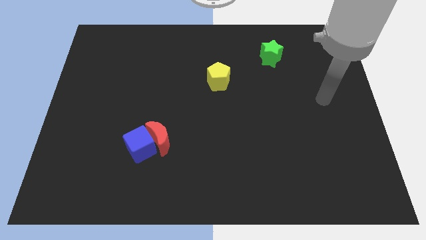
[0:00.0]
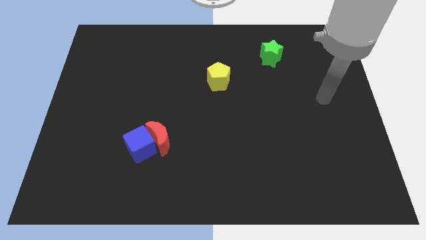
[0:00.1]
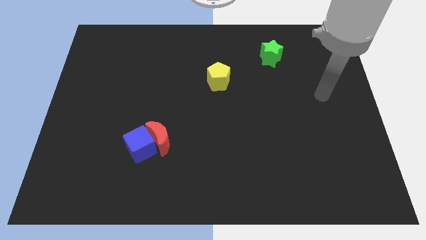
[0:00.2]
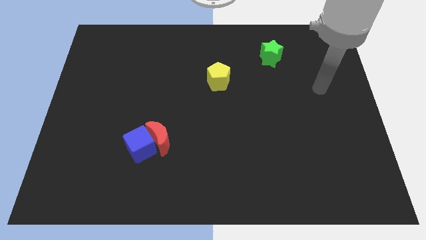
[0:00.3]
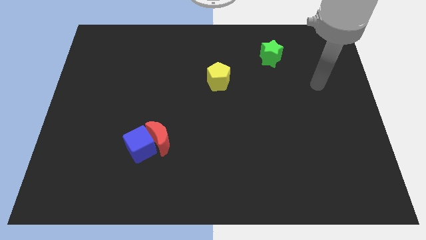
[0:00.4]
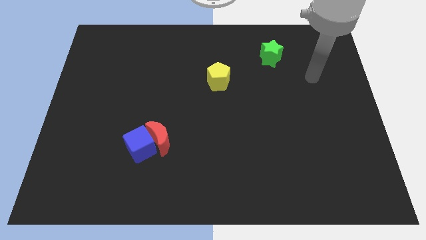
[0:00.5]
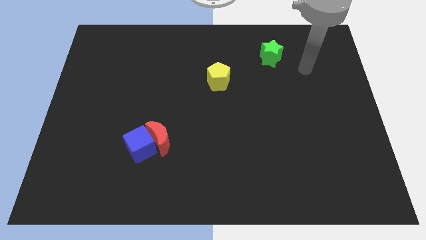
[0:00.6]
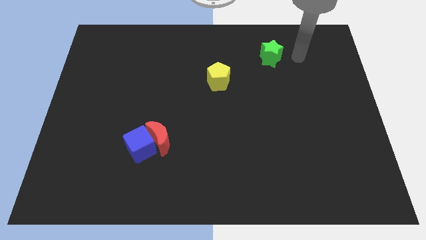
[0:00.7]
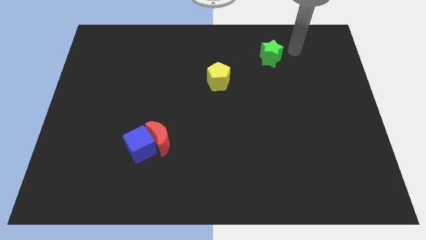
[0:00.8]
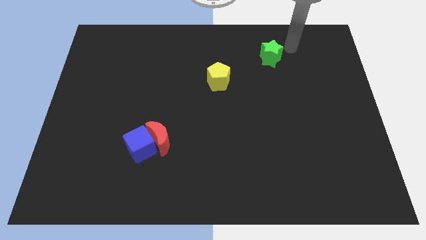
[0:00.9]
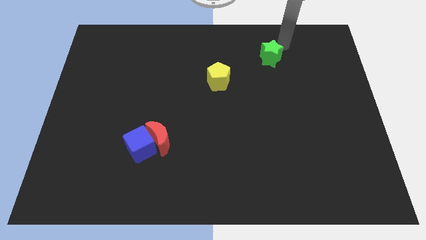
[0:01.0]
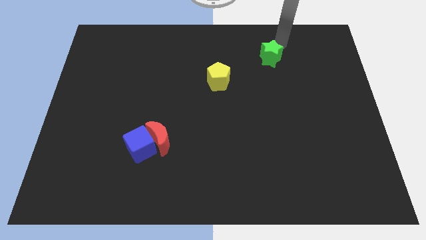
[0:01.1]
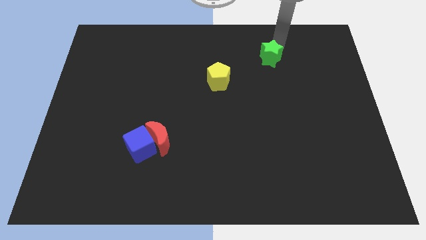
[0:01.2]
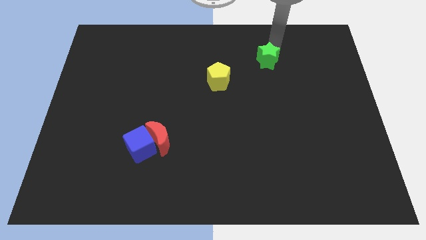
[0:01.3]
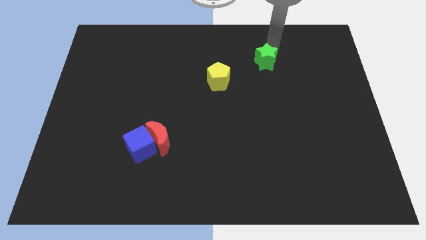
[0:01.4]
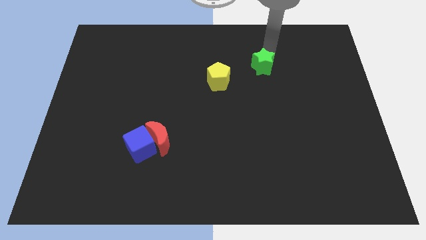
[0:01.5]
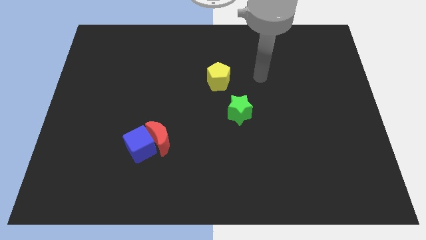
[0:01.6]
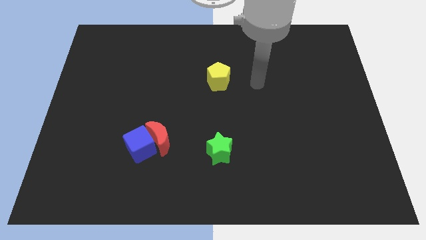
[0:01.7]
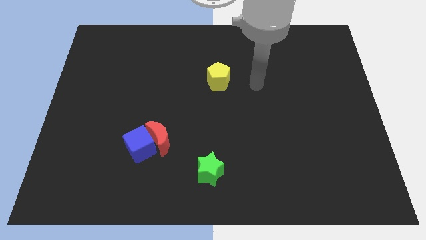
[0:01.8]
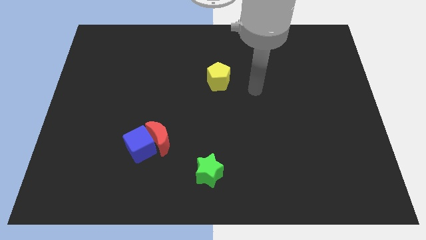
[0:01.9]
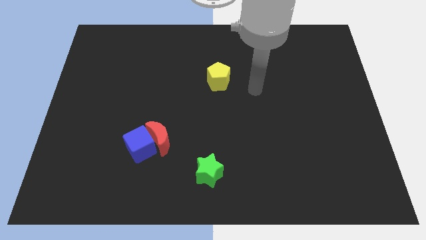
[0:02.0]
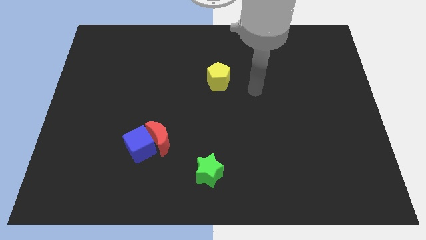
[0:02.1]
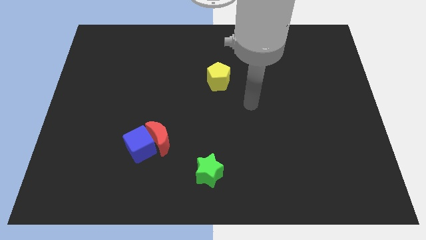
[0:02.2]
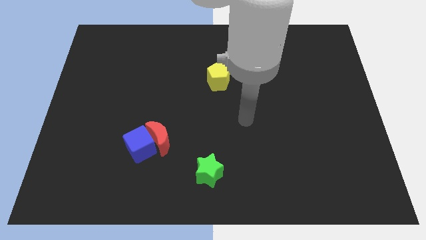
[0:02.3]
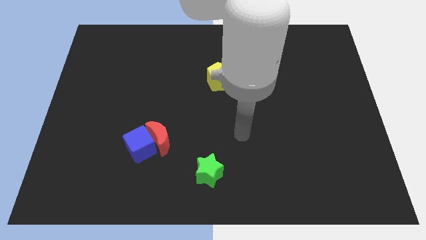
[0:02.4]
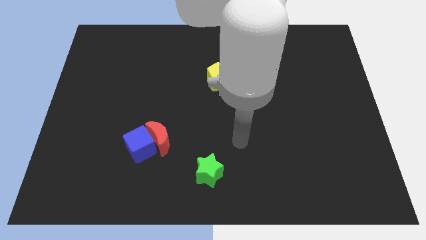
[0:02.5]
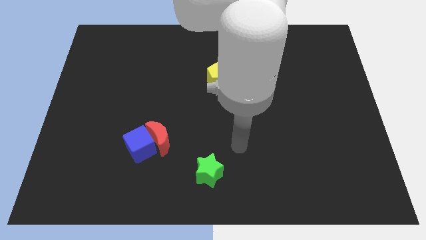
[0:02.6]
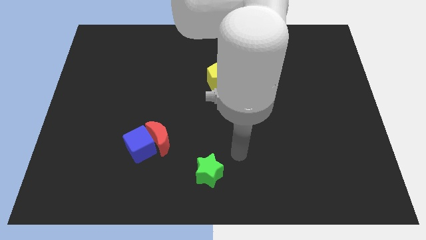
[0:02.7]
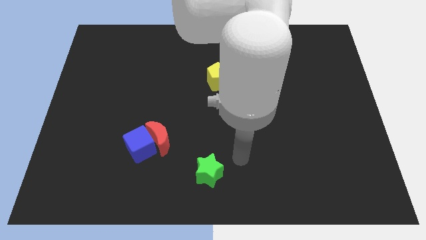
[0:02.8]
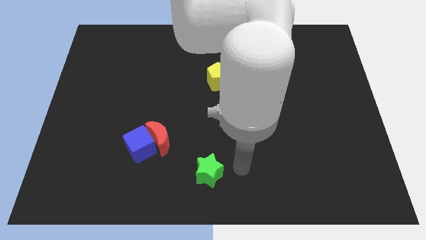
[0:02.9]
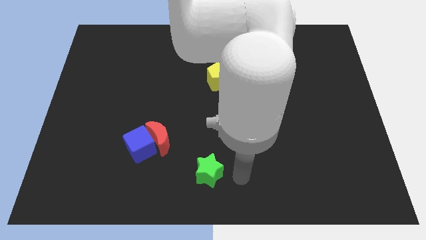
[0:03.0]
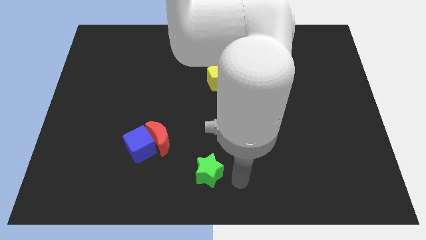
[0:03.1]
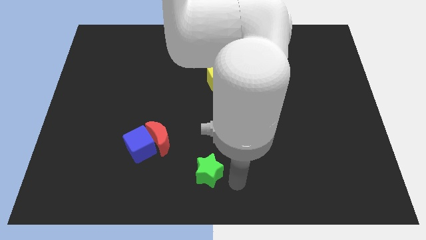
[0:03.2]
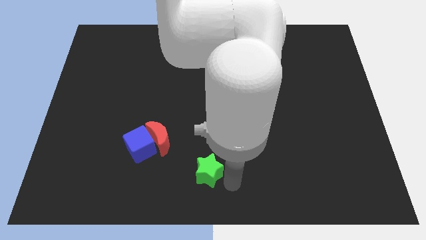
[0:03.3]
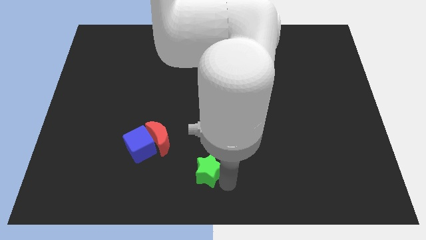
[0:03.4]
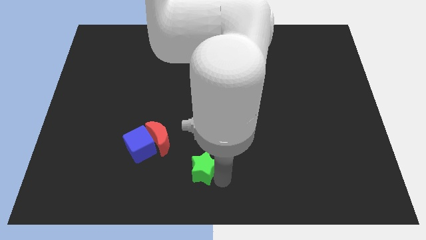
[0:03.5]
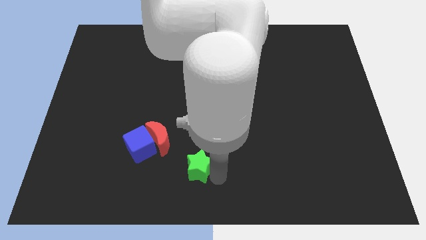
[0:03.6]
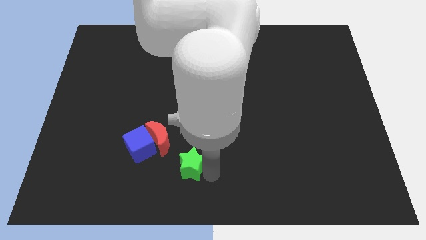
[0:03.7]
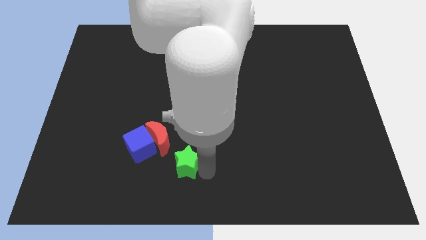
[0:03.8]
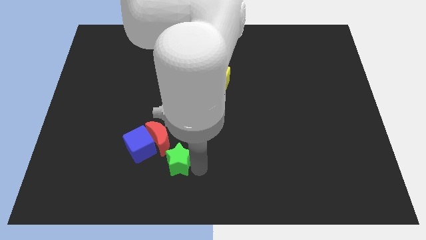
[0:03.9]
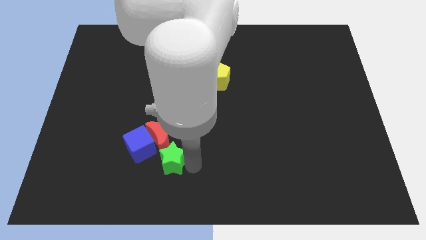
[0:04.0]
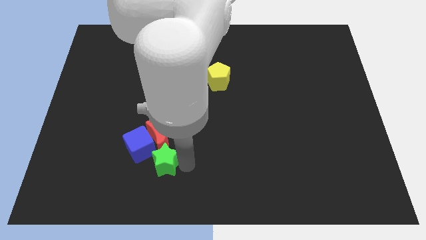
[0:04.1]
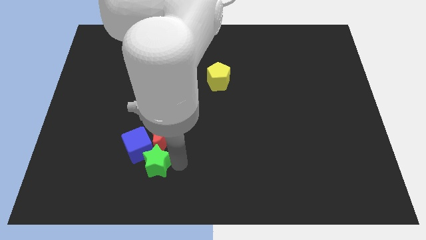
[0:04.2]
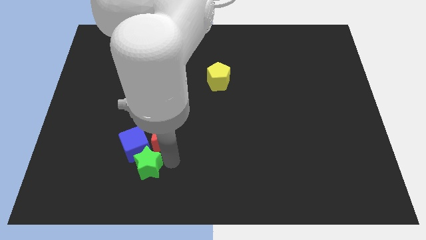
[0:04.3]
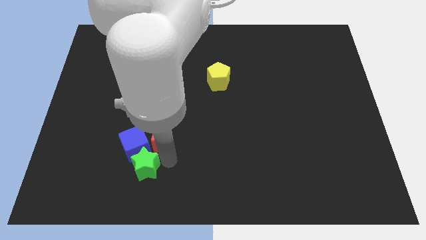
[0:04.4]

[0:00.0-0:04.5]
move the green star towards the blue block

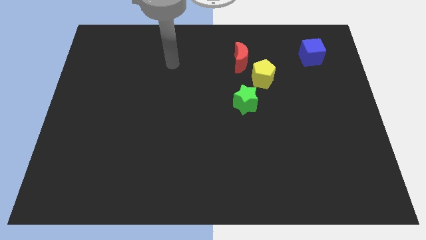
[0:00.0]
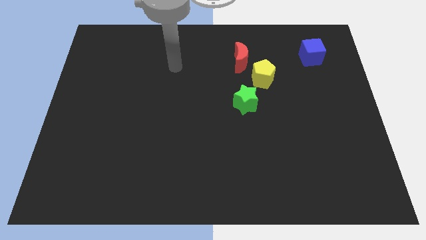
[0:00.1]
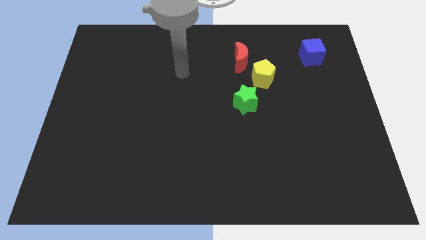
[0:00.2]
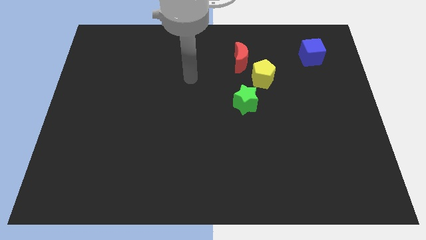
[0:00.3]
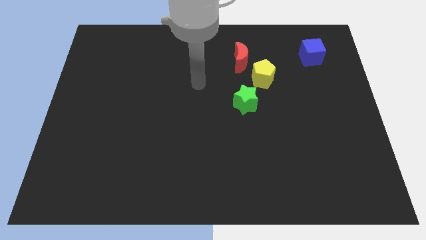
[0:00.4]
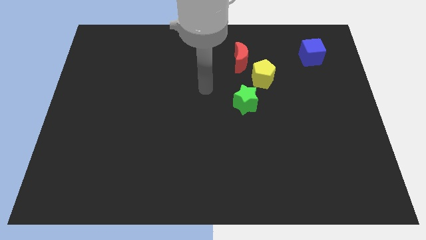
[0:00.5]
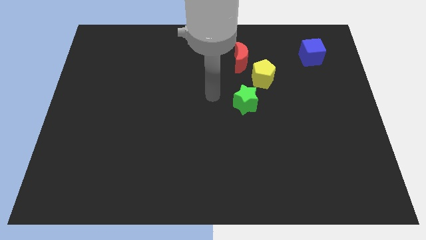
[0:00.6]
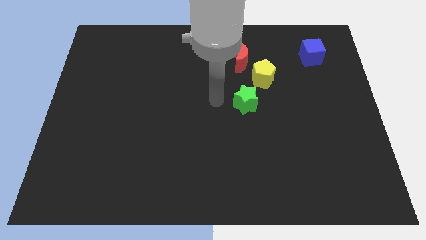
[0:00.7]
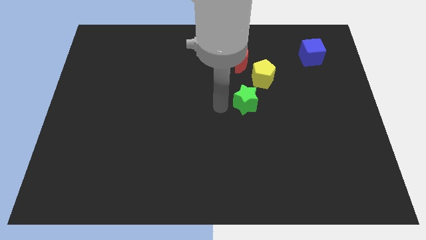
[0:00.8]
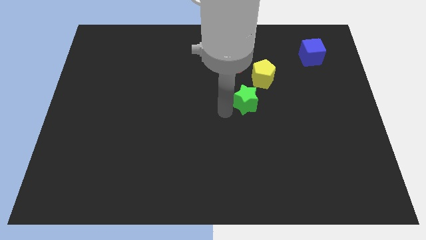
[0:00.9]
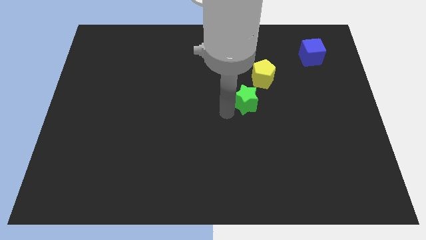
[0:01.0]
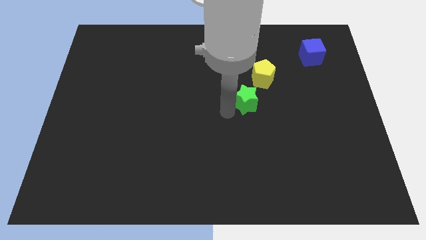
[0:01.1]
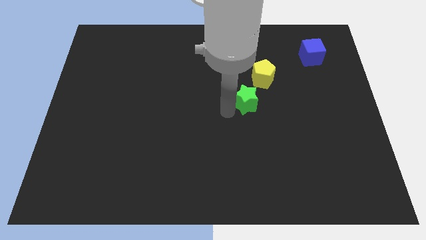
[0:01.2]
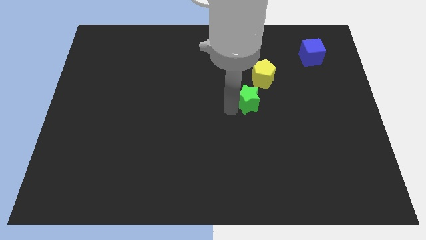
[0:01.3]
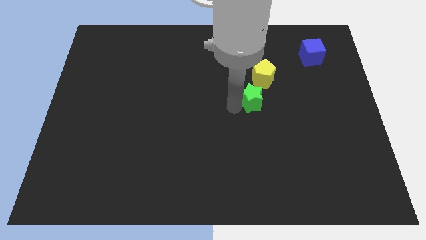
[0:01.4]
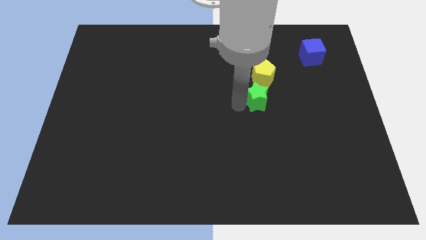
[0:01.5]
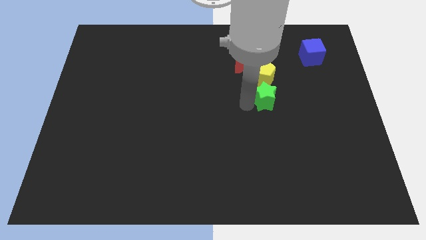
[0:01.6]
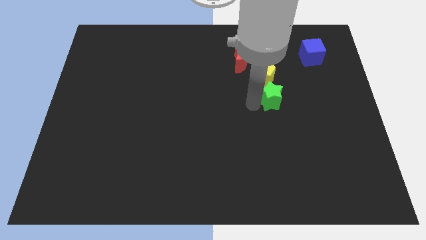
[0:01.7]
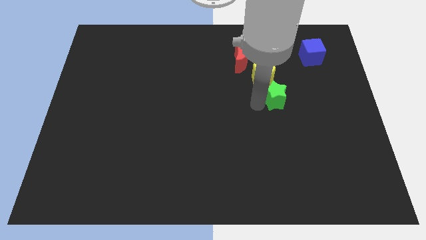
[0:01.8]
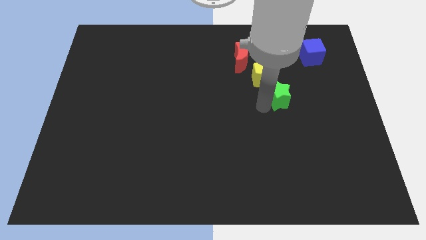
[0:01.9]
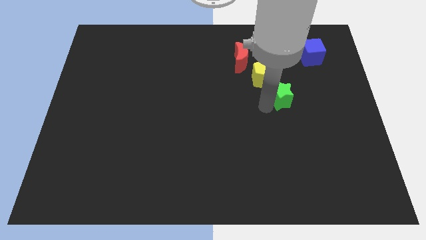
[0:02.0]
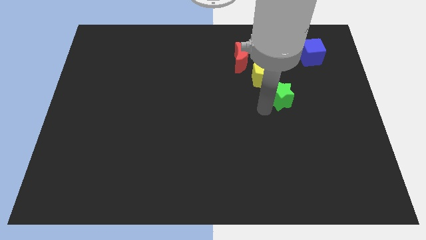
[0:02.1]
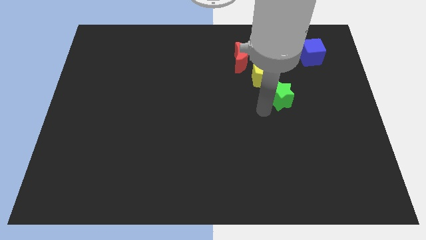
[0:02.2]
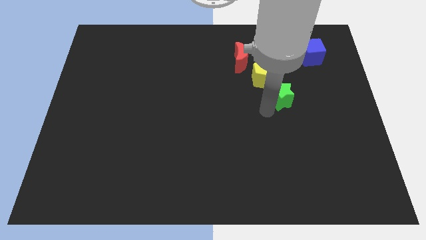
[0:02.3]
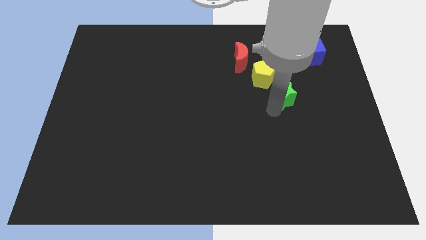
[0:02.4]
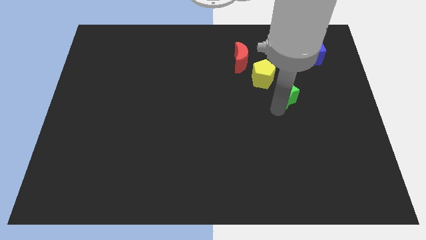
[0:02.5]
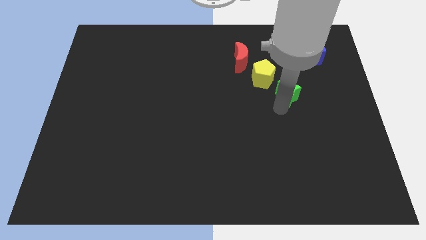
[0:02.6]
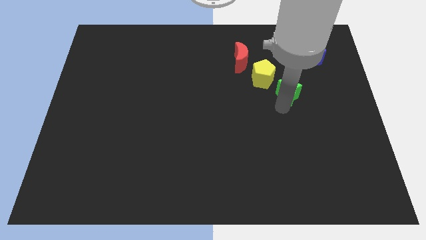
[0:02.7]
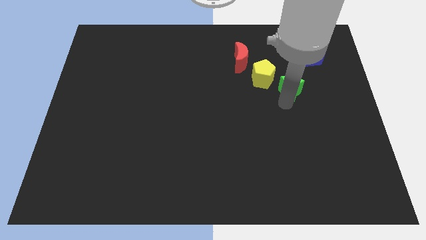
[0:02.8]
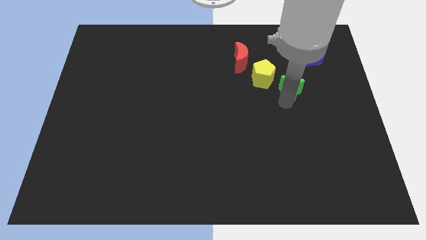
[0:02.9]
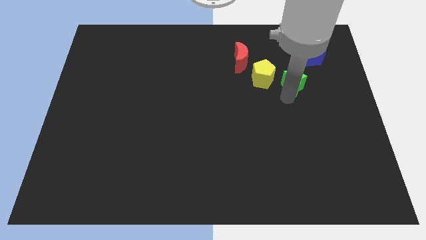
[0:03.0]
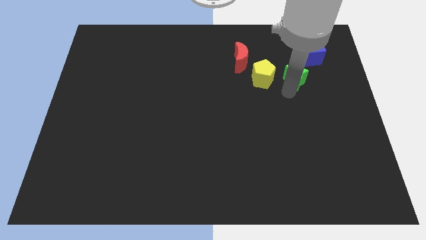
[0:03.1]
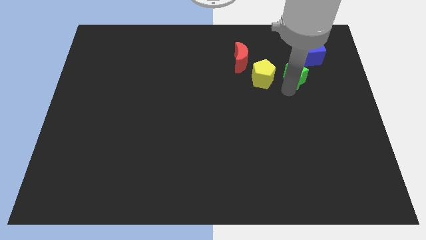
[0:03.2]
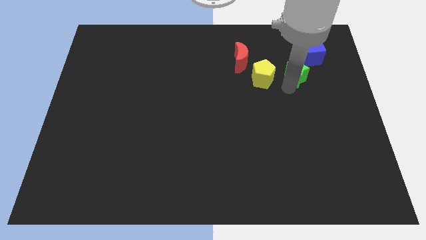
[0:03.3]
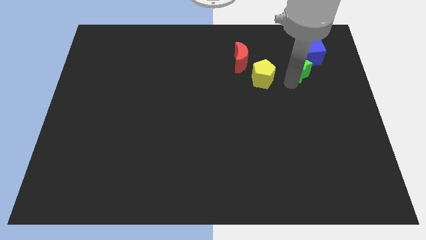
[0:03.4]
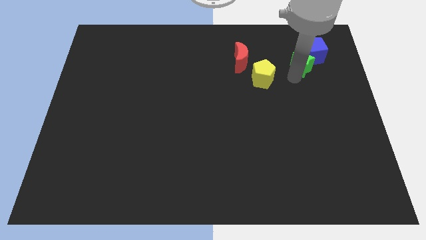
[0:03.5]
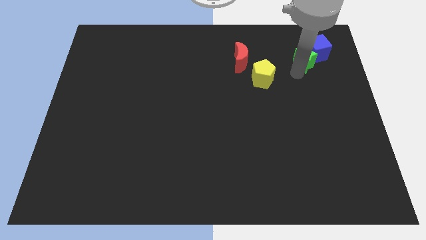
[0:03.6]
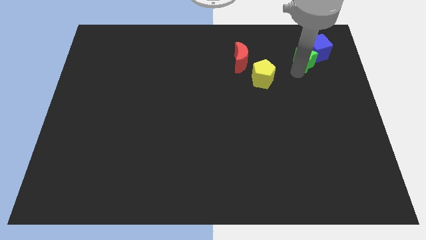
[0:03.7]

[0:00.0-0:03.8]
push the star towards the blue cube

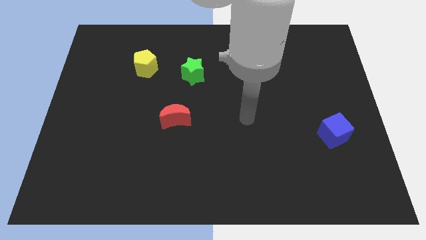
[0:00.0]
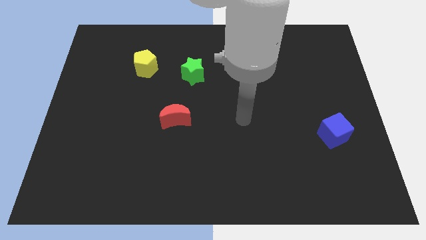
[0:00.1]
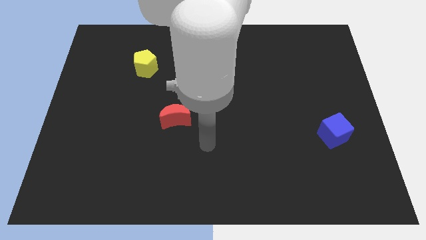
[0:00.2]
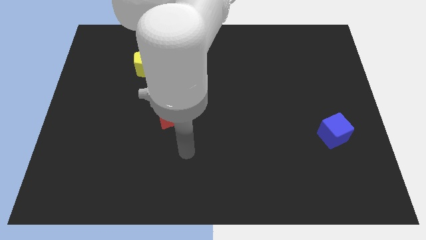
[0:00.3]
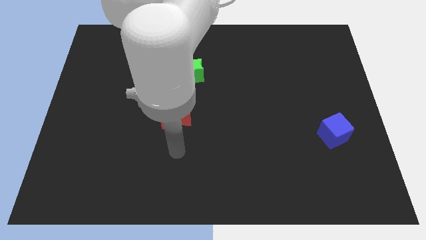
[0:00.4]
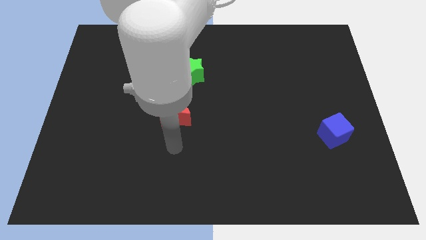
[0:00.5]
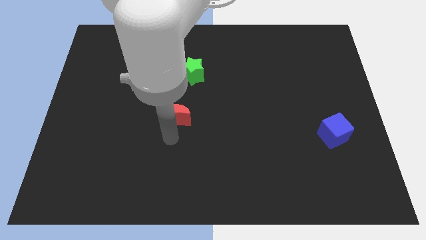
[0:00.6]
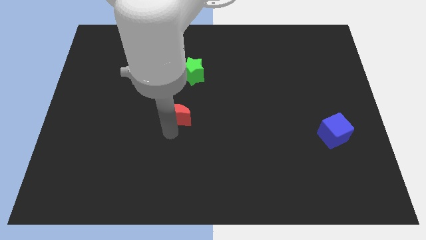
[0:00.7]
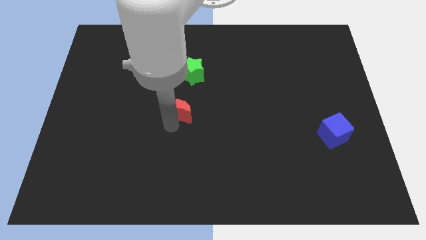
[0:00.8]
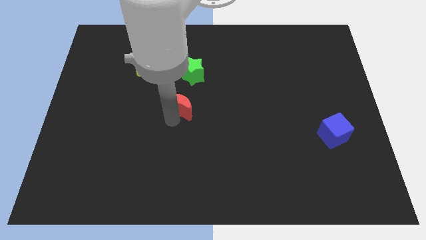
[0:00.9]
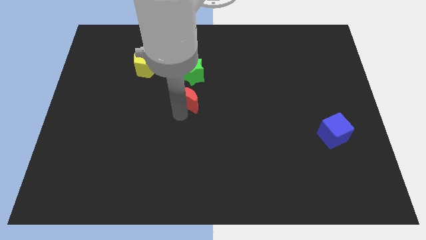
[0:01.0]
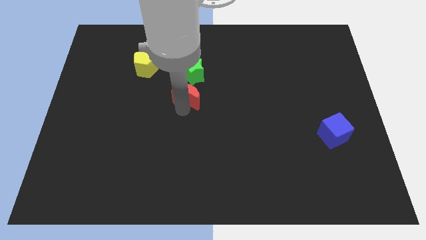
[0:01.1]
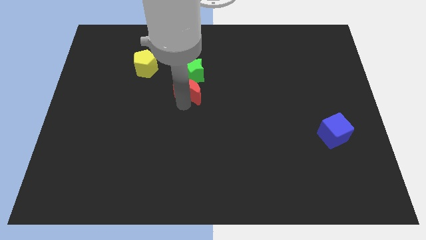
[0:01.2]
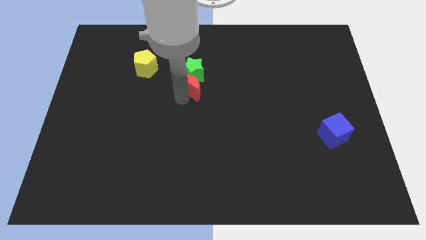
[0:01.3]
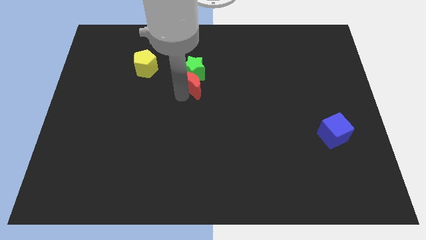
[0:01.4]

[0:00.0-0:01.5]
put the moon towards the green block
